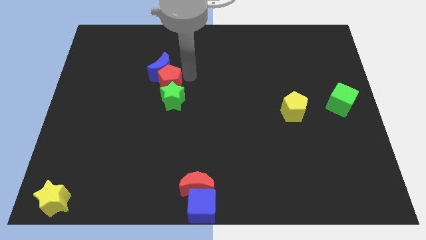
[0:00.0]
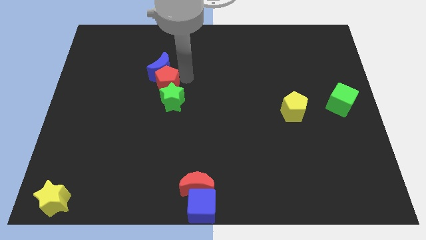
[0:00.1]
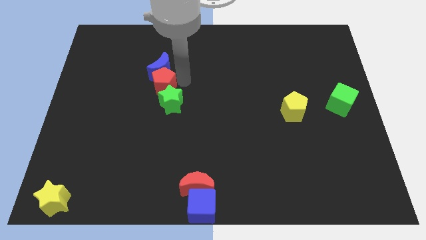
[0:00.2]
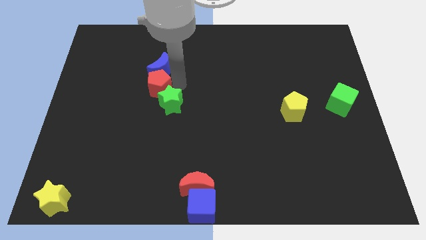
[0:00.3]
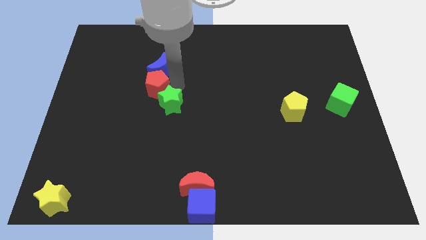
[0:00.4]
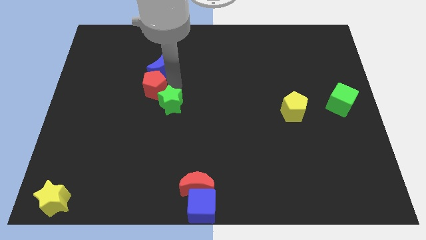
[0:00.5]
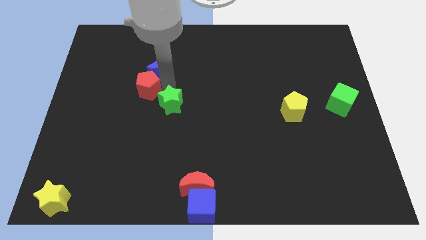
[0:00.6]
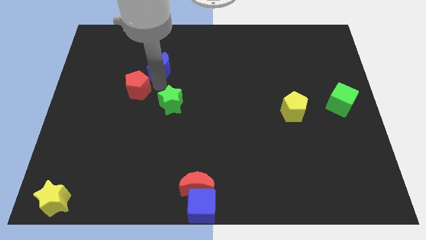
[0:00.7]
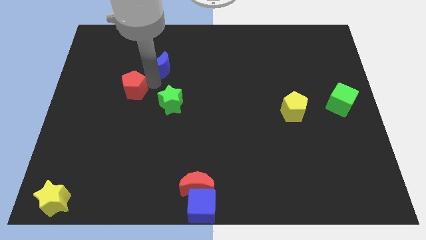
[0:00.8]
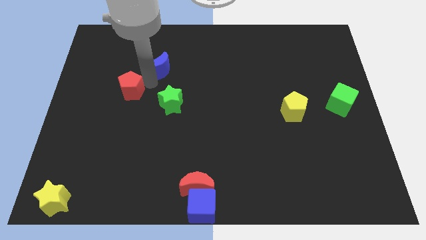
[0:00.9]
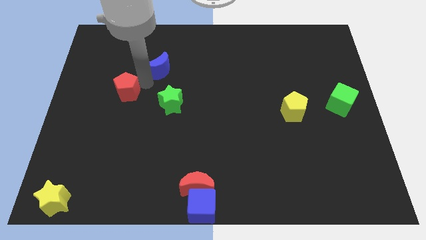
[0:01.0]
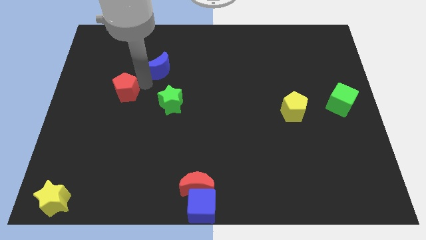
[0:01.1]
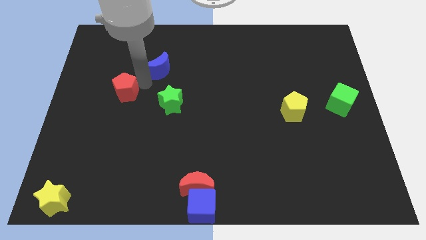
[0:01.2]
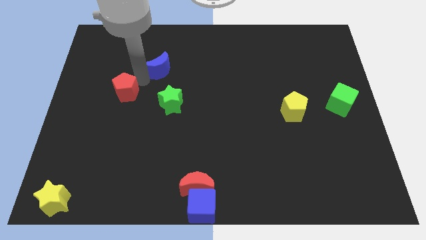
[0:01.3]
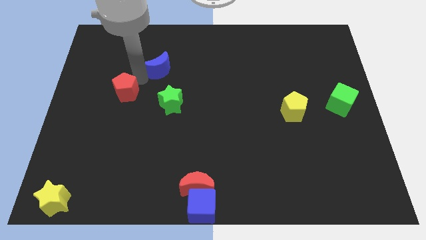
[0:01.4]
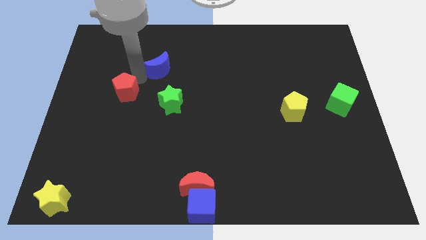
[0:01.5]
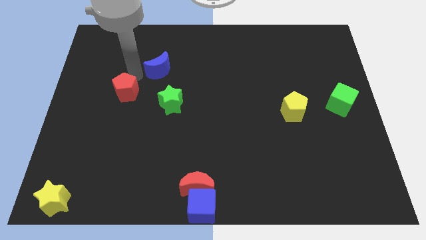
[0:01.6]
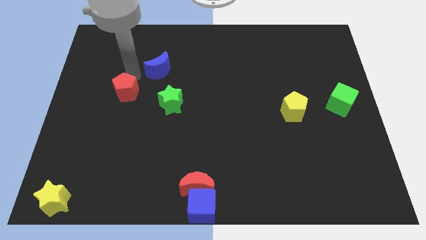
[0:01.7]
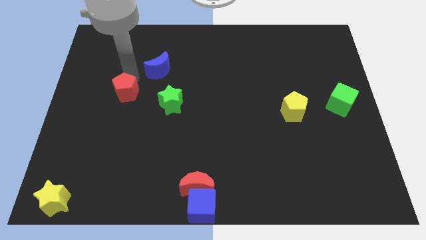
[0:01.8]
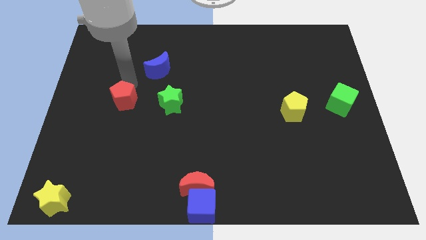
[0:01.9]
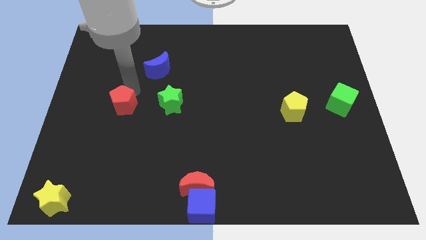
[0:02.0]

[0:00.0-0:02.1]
place red pentagon left to green star

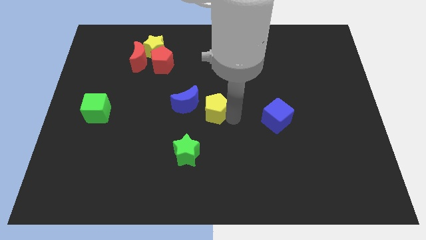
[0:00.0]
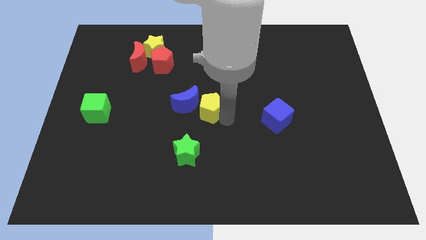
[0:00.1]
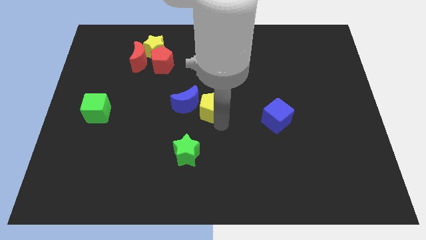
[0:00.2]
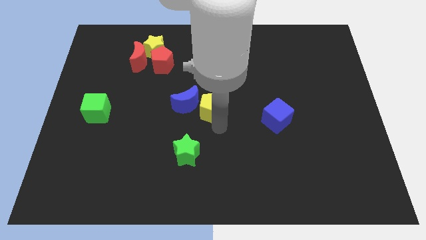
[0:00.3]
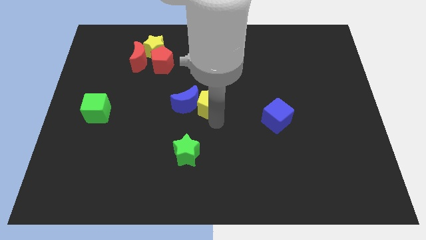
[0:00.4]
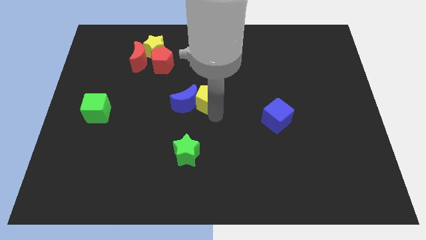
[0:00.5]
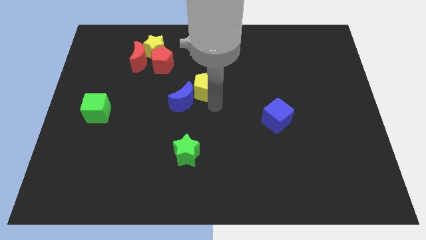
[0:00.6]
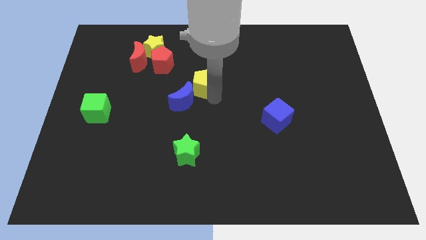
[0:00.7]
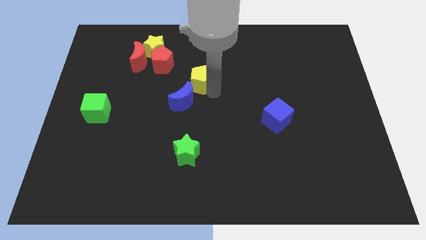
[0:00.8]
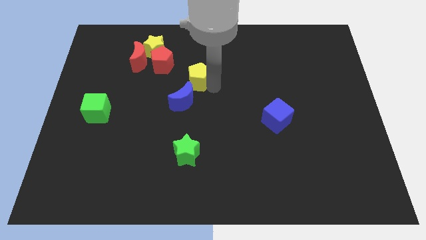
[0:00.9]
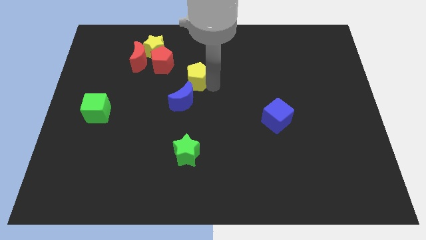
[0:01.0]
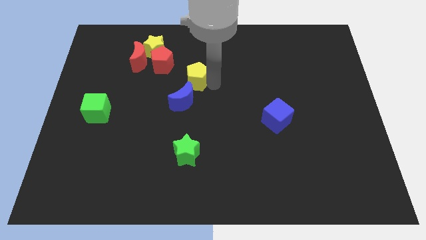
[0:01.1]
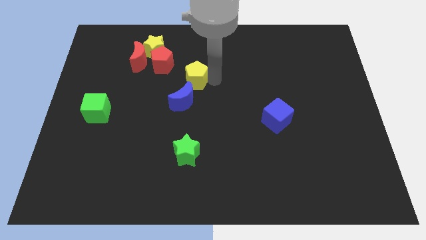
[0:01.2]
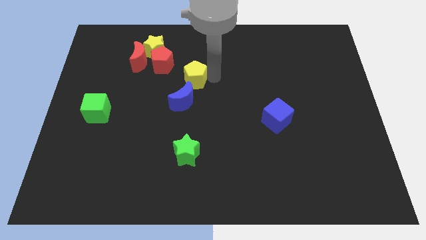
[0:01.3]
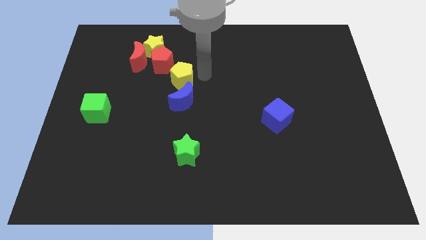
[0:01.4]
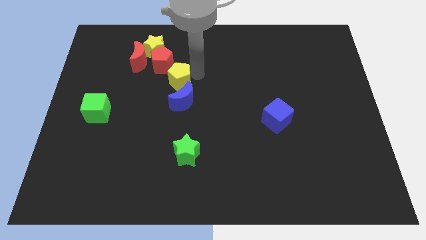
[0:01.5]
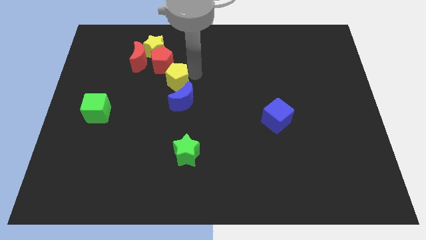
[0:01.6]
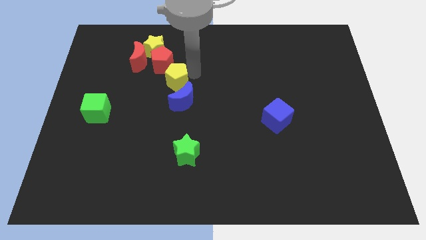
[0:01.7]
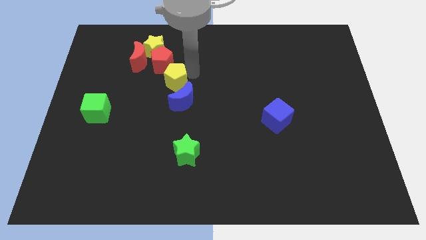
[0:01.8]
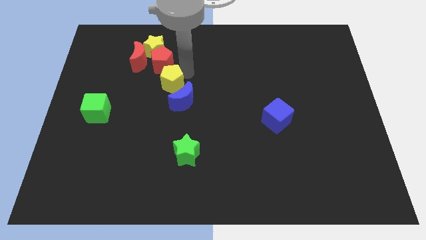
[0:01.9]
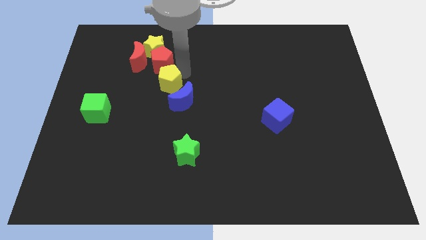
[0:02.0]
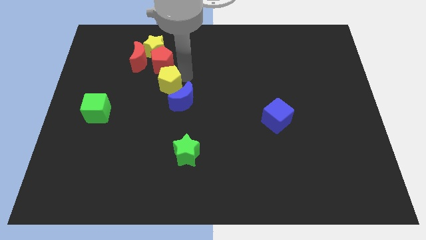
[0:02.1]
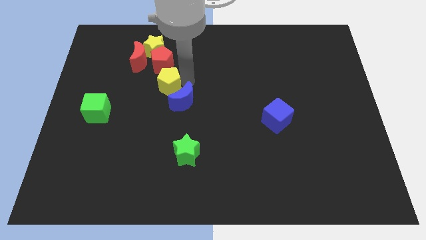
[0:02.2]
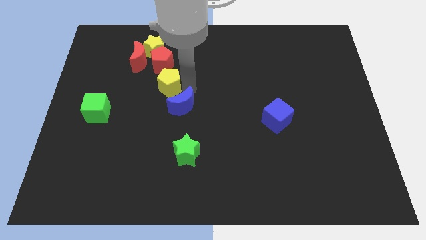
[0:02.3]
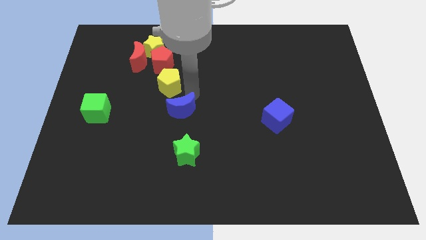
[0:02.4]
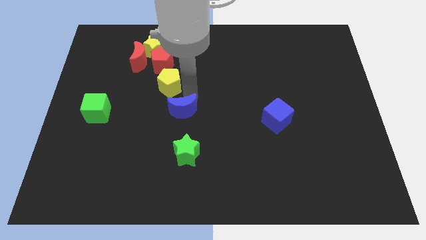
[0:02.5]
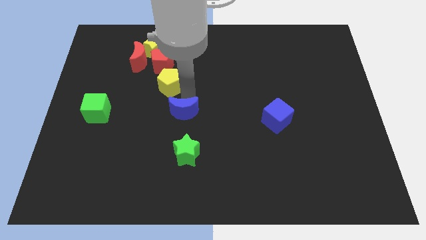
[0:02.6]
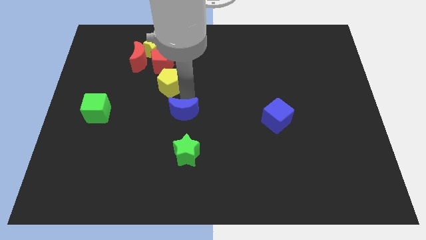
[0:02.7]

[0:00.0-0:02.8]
place yellow pentagon between red pentagon and blue moon

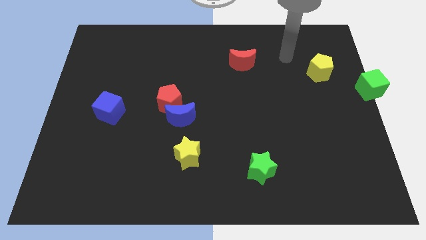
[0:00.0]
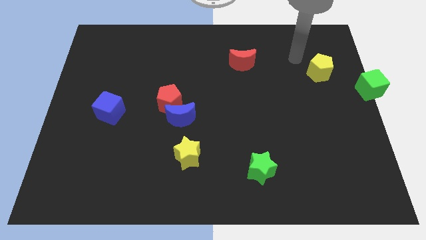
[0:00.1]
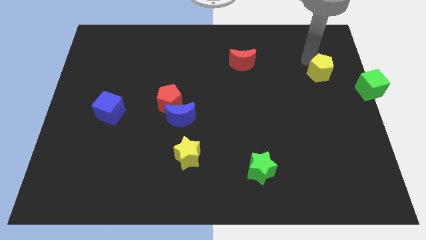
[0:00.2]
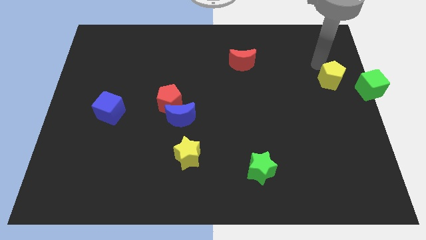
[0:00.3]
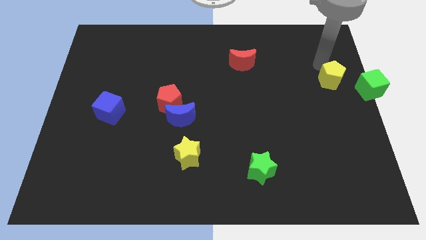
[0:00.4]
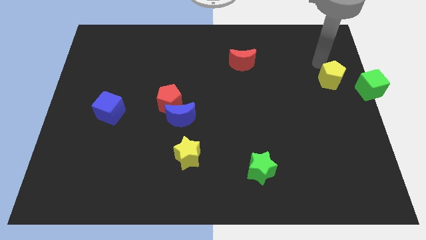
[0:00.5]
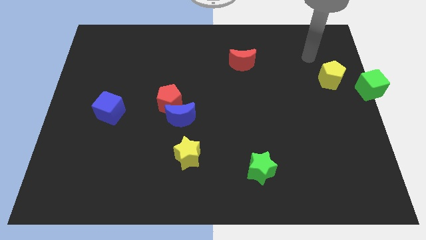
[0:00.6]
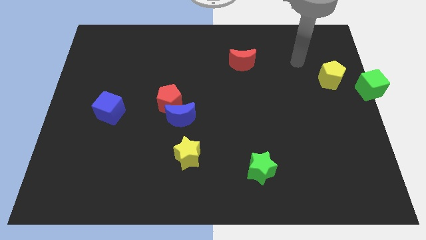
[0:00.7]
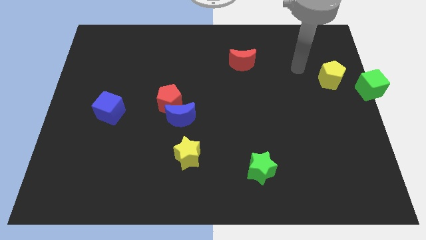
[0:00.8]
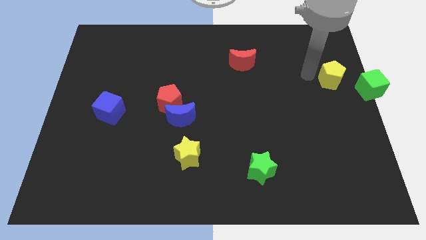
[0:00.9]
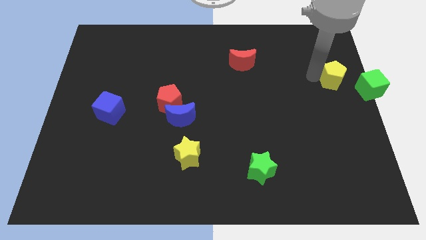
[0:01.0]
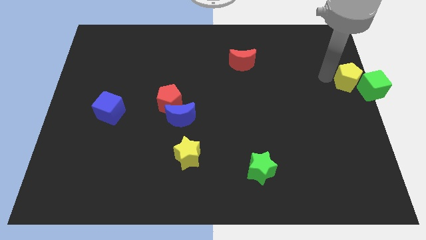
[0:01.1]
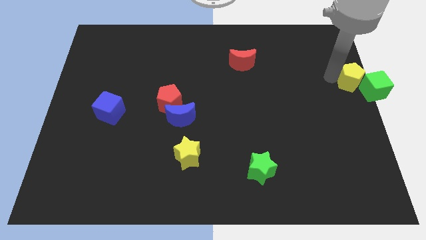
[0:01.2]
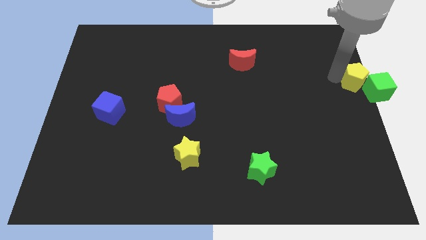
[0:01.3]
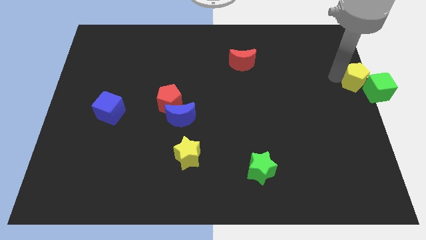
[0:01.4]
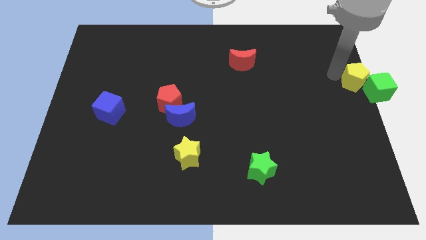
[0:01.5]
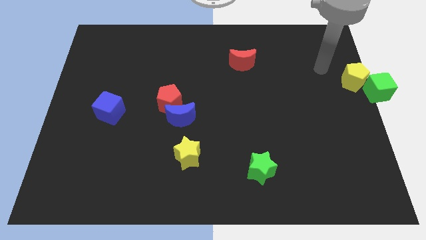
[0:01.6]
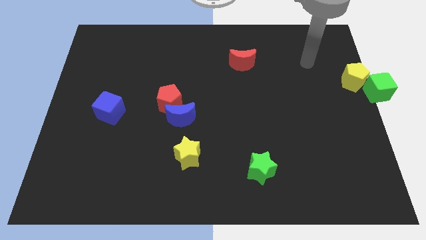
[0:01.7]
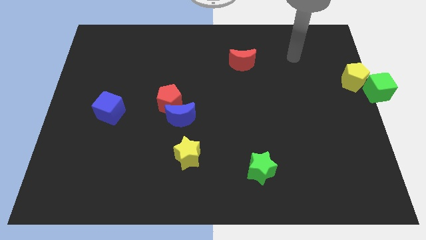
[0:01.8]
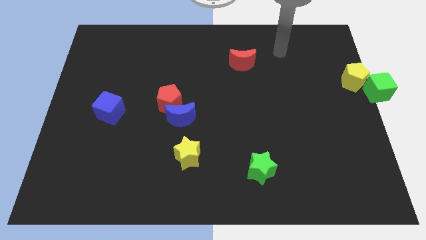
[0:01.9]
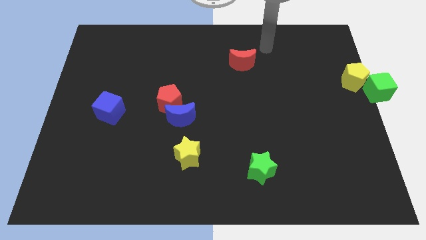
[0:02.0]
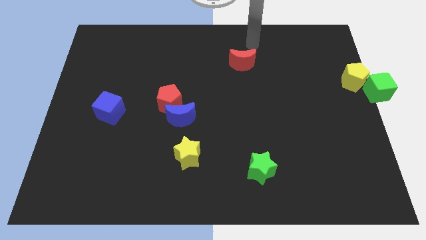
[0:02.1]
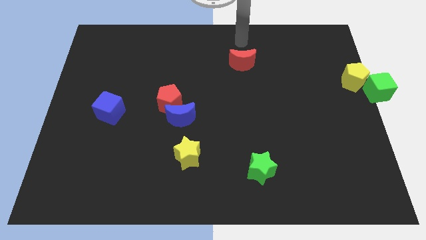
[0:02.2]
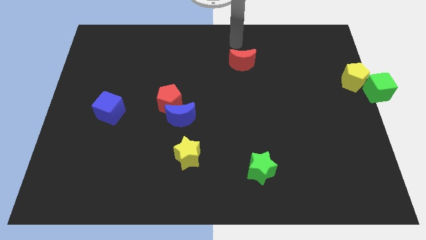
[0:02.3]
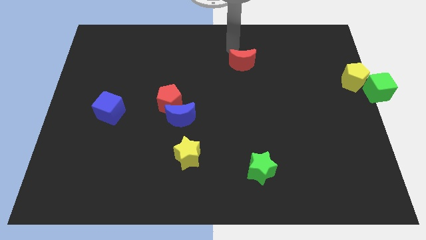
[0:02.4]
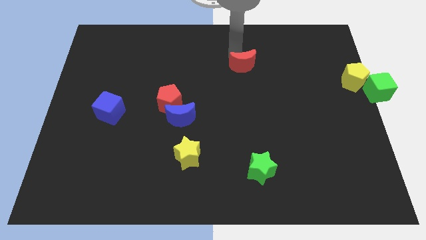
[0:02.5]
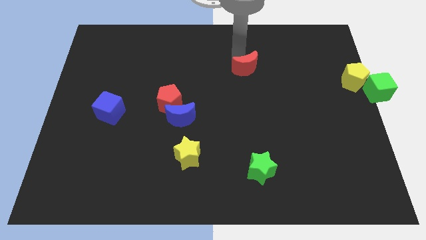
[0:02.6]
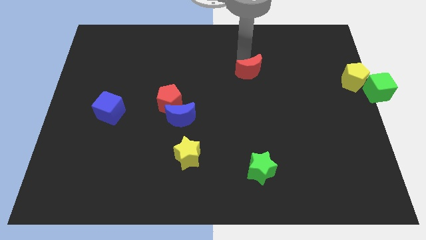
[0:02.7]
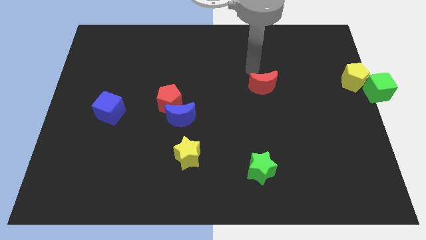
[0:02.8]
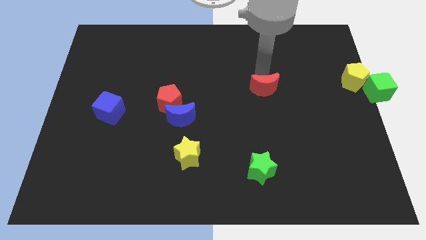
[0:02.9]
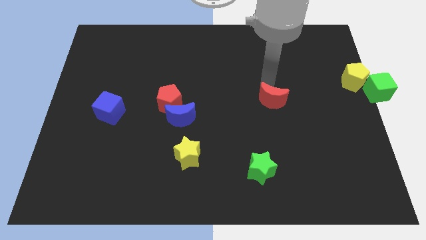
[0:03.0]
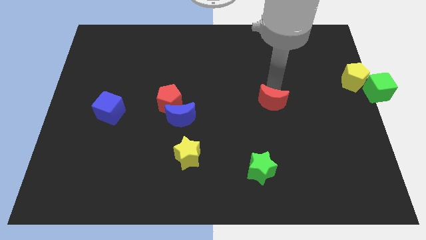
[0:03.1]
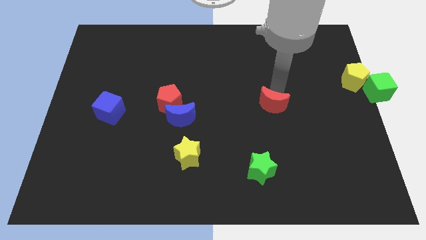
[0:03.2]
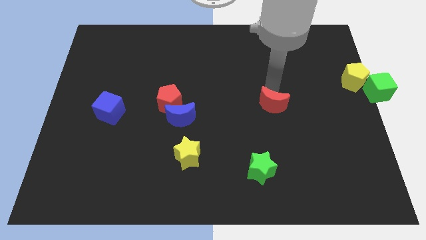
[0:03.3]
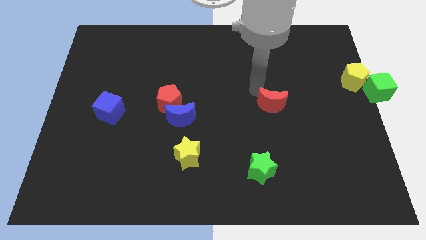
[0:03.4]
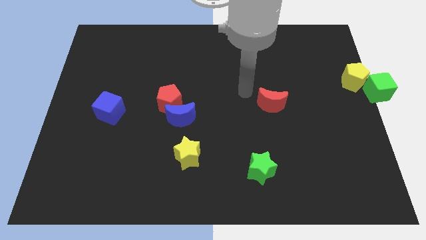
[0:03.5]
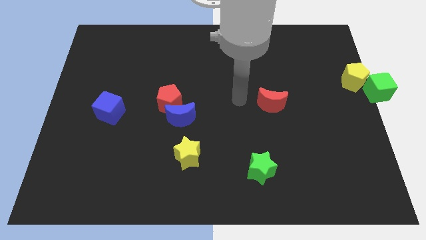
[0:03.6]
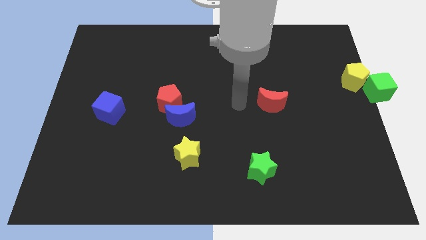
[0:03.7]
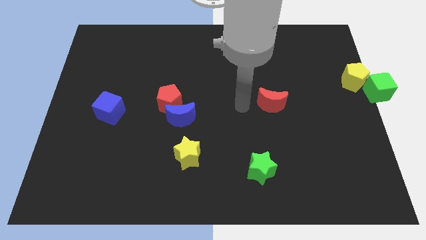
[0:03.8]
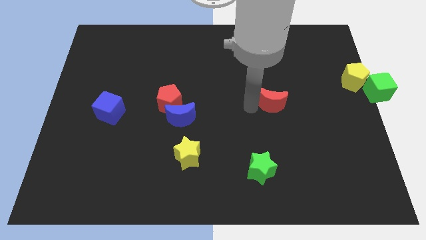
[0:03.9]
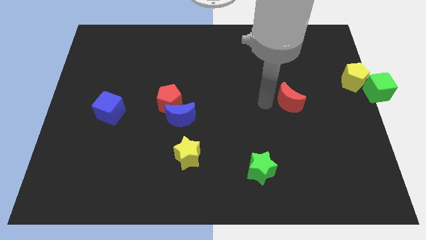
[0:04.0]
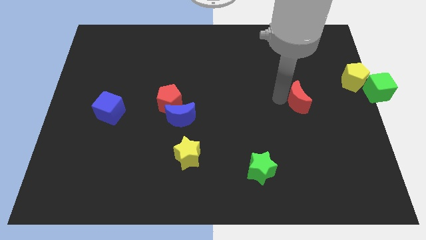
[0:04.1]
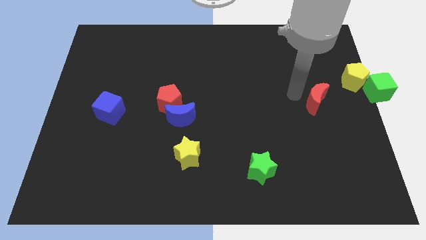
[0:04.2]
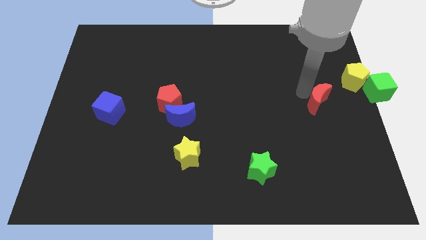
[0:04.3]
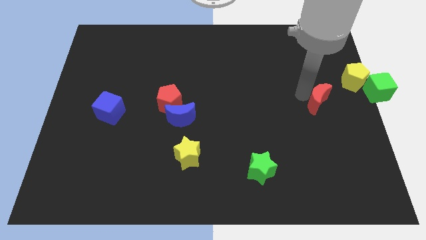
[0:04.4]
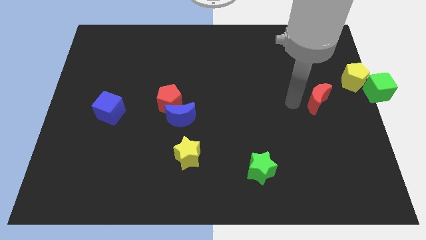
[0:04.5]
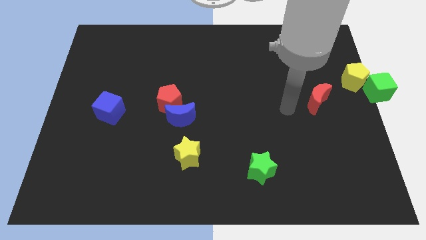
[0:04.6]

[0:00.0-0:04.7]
push red moon towards center right
